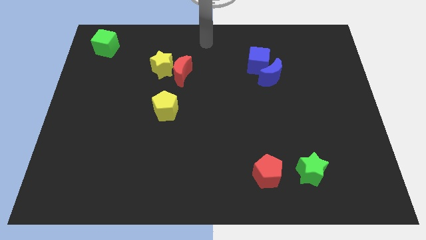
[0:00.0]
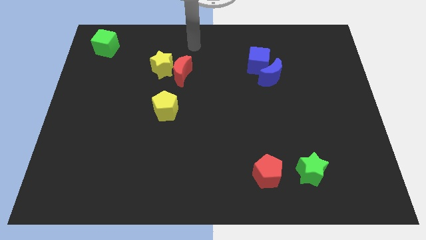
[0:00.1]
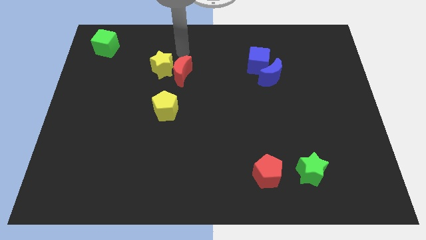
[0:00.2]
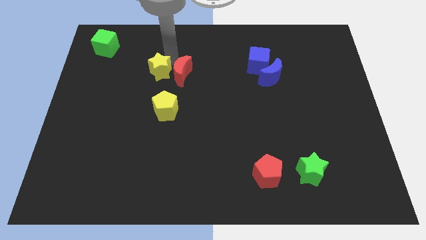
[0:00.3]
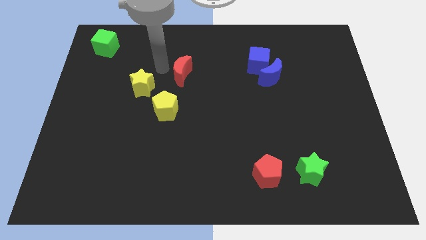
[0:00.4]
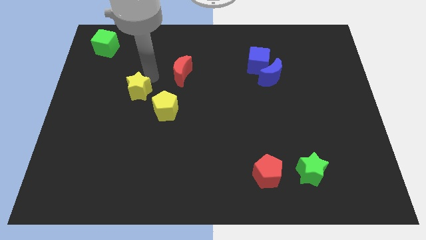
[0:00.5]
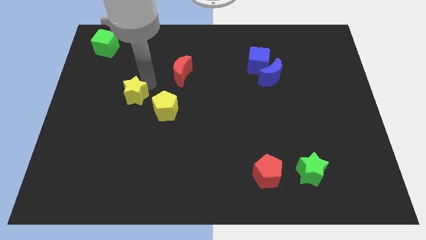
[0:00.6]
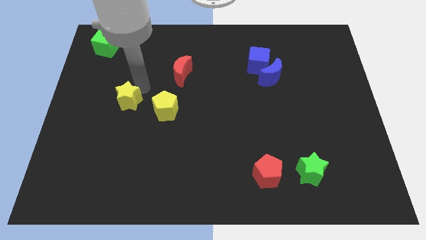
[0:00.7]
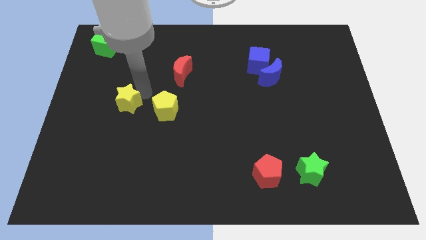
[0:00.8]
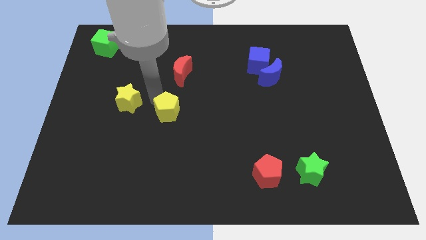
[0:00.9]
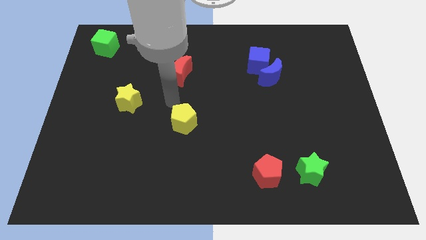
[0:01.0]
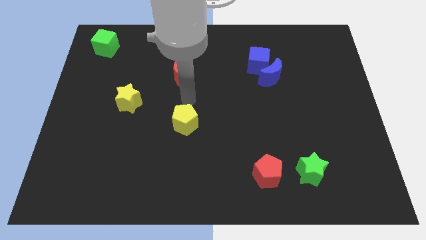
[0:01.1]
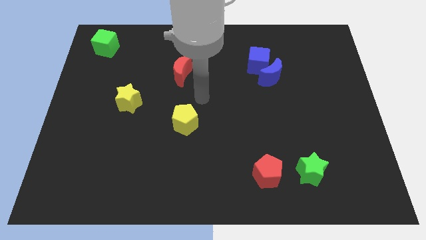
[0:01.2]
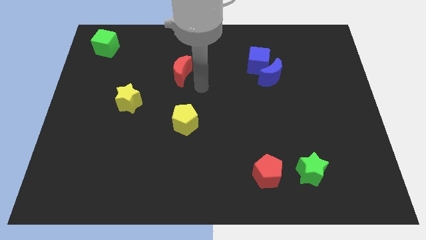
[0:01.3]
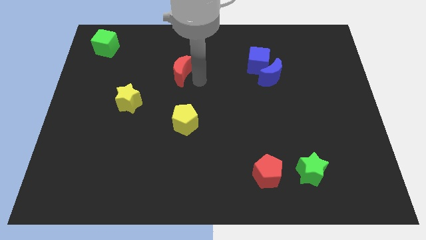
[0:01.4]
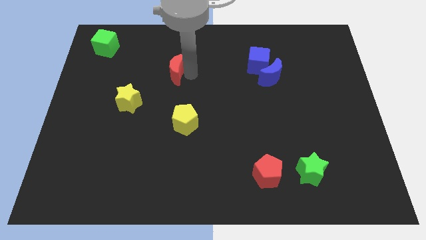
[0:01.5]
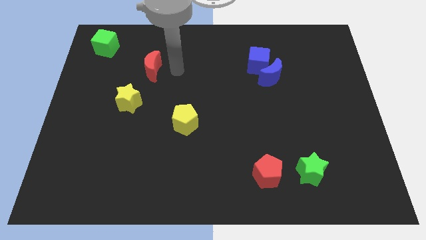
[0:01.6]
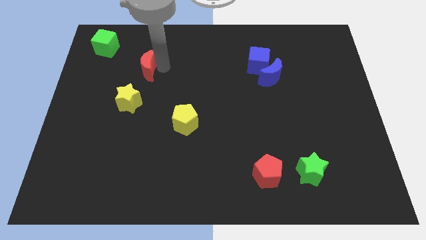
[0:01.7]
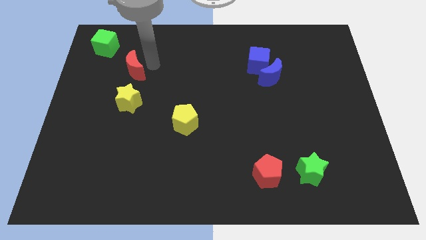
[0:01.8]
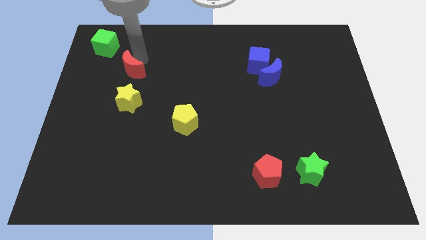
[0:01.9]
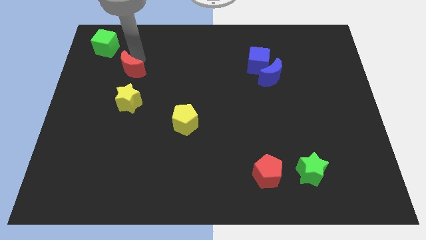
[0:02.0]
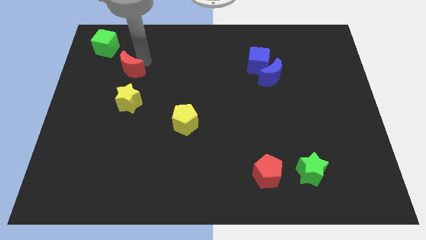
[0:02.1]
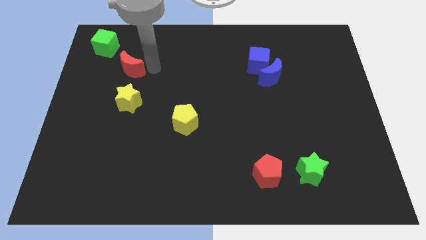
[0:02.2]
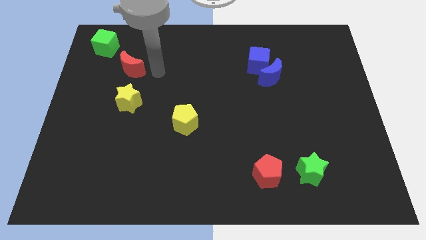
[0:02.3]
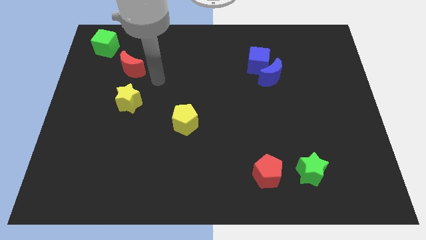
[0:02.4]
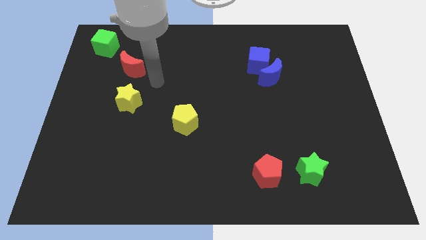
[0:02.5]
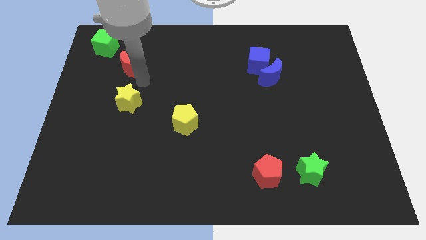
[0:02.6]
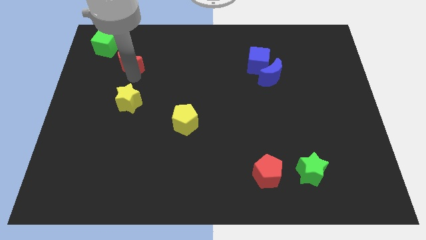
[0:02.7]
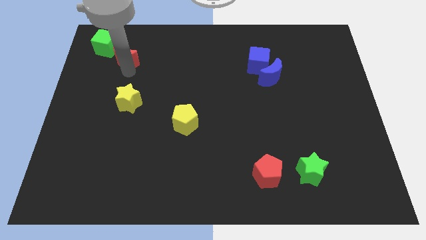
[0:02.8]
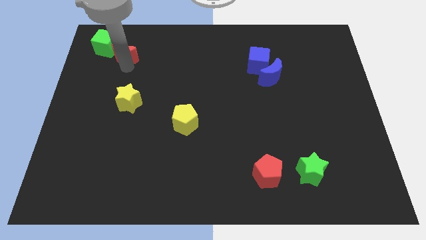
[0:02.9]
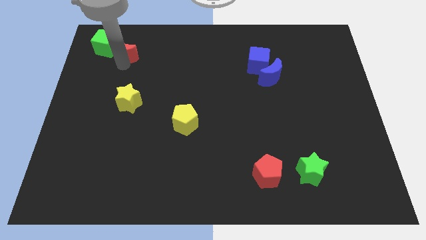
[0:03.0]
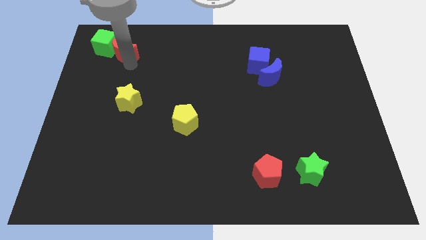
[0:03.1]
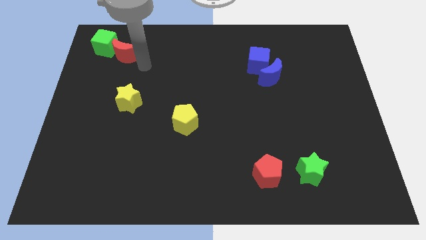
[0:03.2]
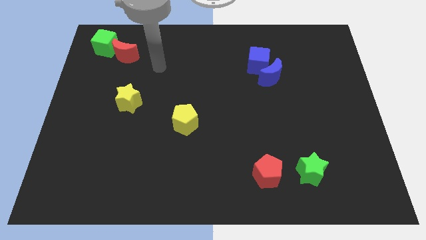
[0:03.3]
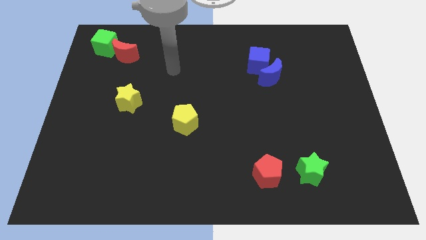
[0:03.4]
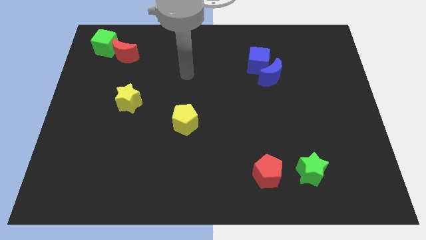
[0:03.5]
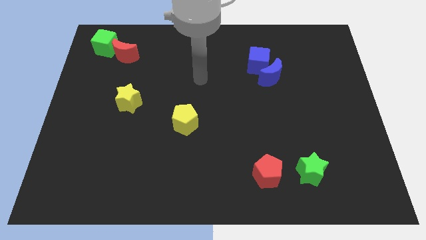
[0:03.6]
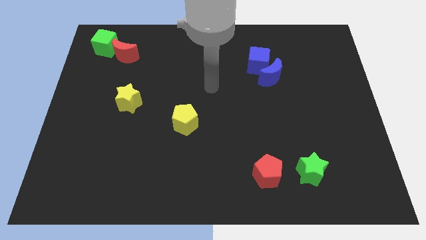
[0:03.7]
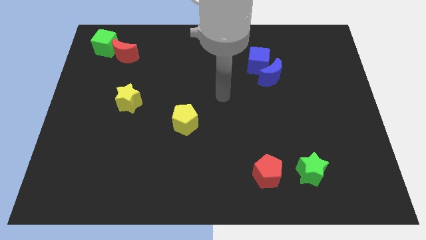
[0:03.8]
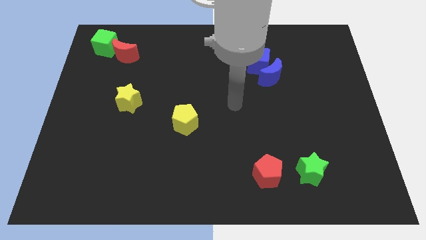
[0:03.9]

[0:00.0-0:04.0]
push the red crescent towards the green cube

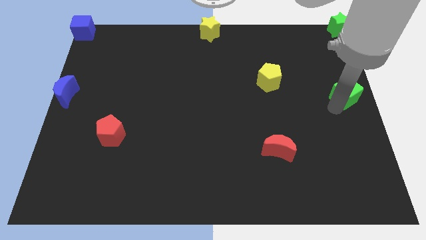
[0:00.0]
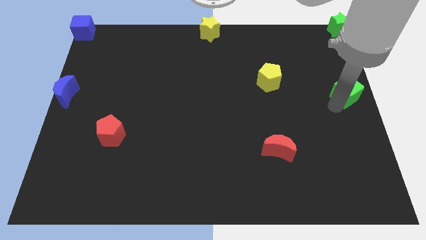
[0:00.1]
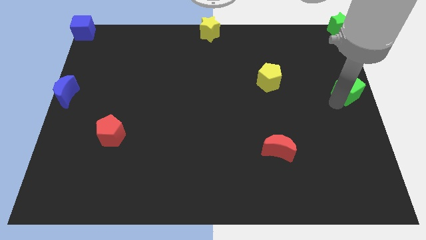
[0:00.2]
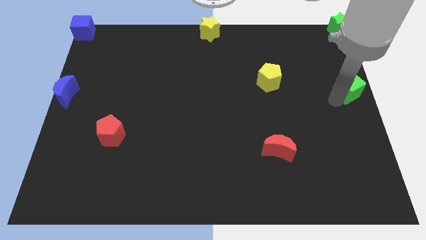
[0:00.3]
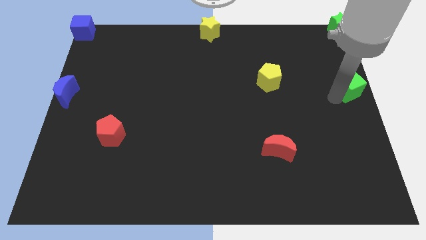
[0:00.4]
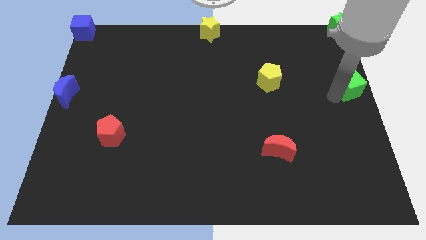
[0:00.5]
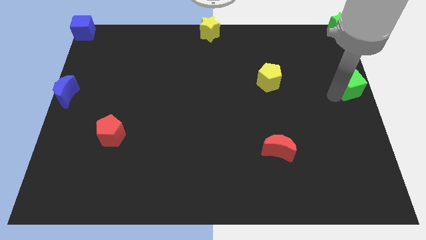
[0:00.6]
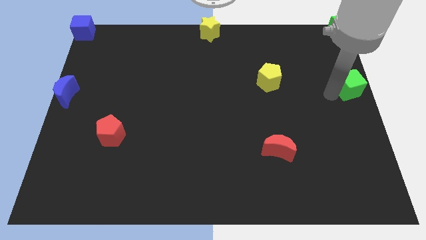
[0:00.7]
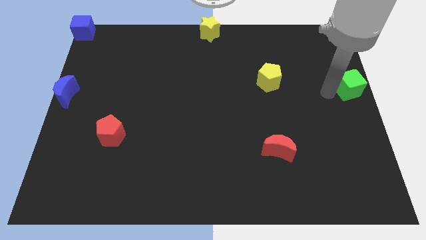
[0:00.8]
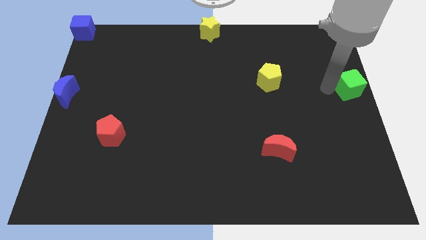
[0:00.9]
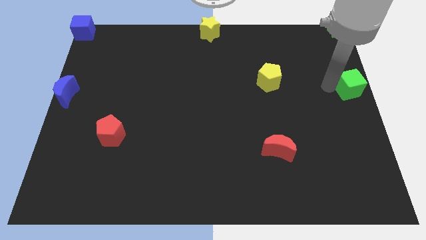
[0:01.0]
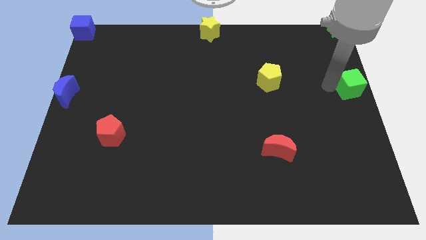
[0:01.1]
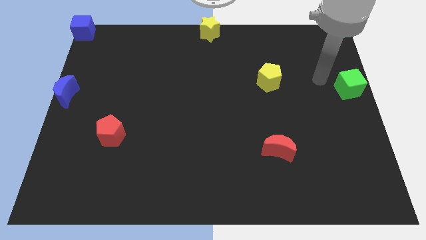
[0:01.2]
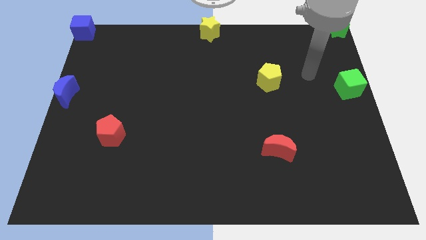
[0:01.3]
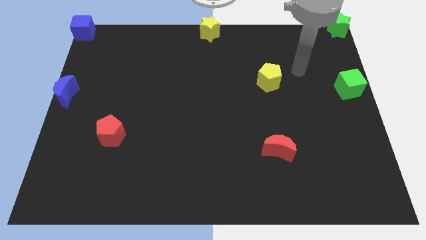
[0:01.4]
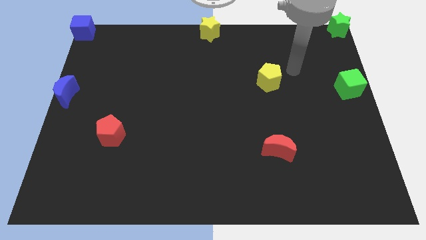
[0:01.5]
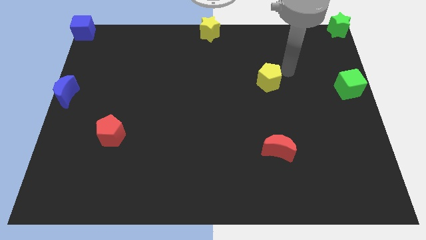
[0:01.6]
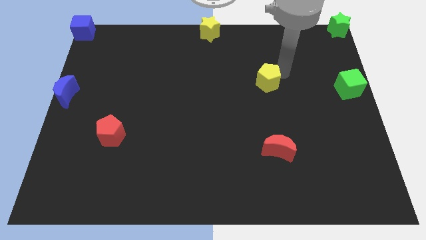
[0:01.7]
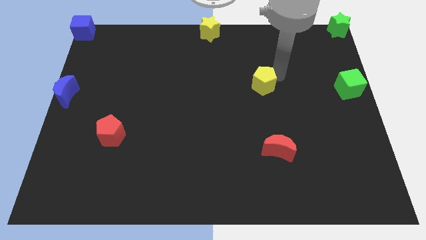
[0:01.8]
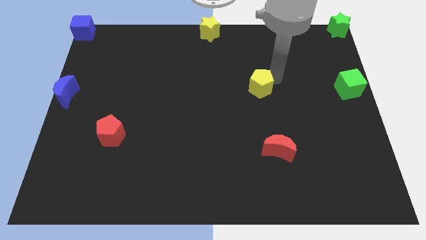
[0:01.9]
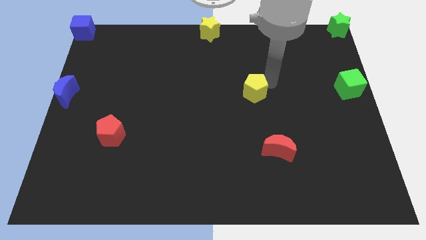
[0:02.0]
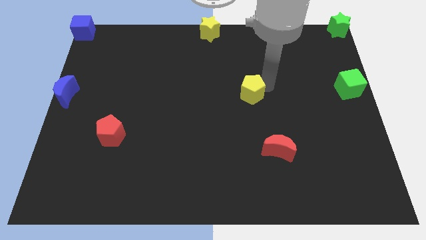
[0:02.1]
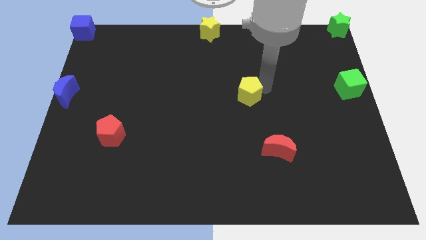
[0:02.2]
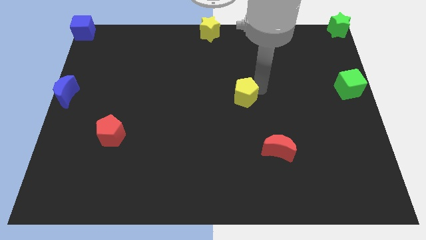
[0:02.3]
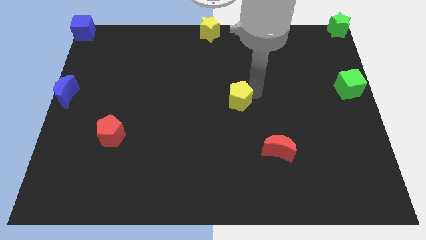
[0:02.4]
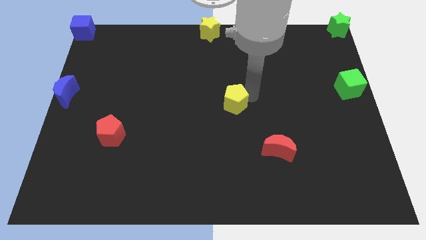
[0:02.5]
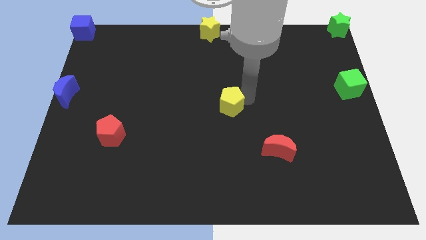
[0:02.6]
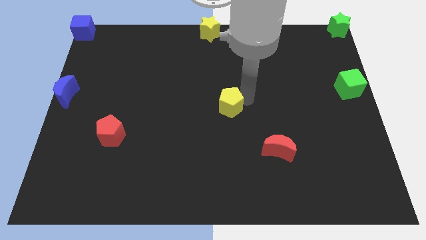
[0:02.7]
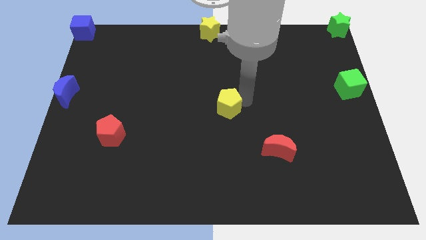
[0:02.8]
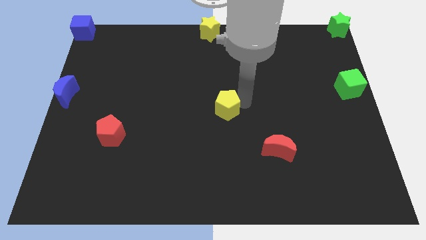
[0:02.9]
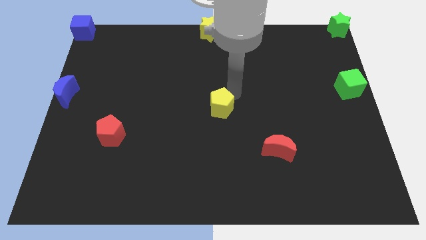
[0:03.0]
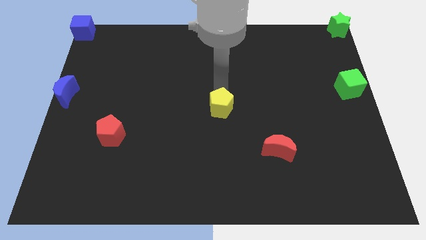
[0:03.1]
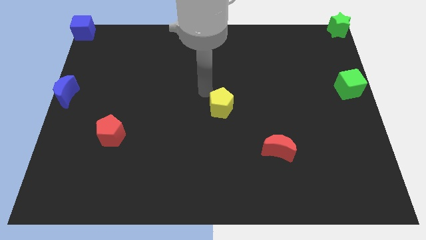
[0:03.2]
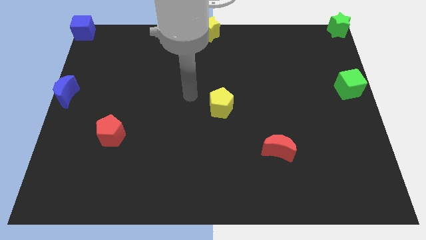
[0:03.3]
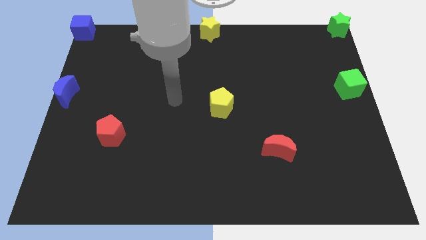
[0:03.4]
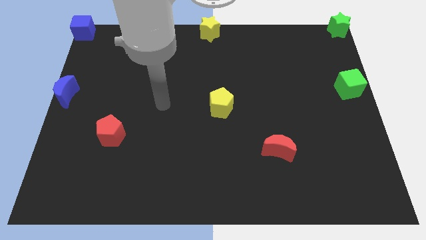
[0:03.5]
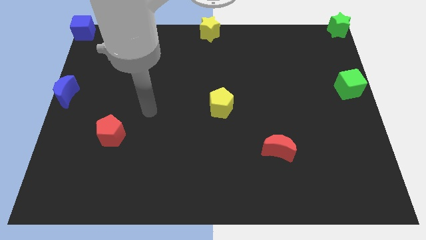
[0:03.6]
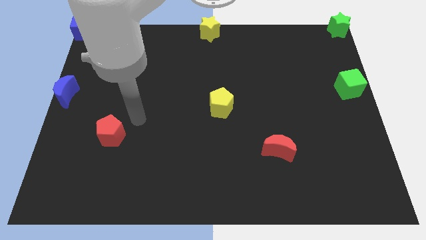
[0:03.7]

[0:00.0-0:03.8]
move yellow pentagon to the center of the board

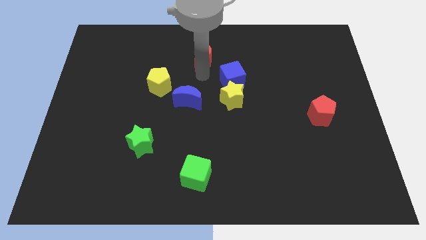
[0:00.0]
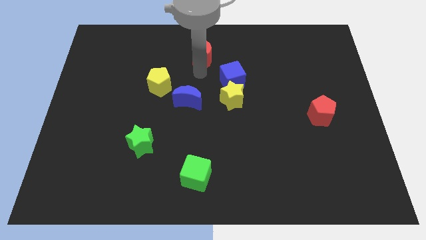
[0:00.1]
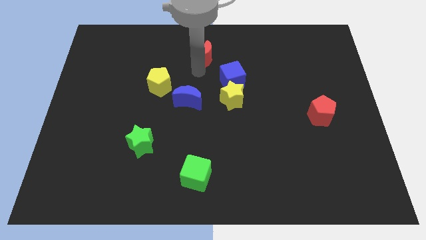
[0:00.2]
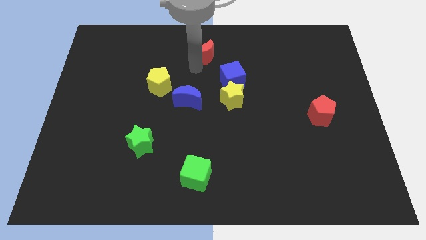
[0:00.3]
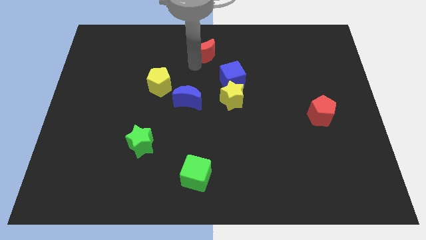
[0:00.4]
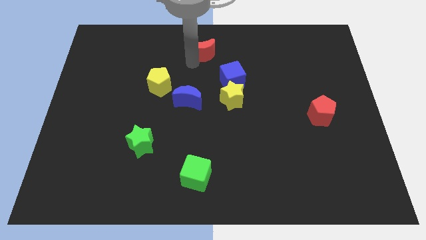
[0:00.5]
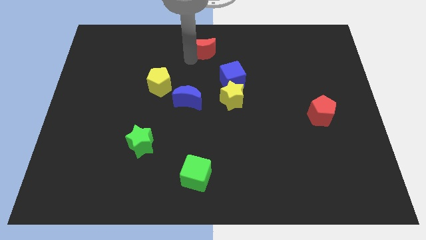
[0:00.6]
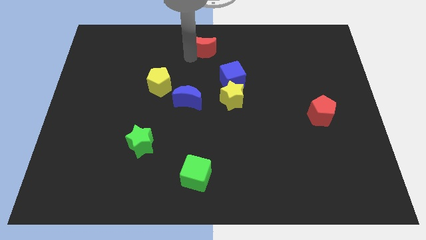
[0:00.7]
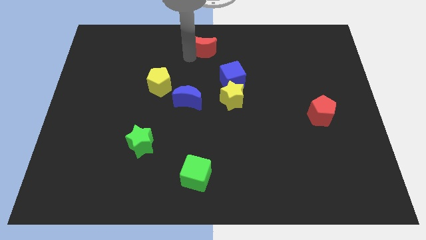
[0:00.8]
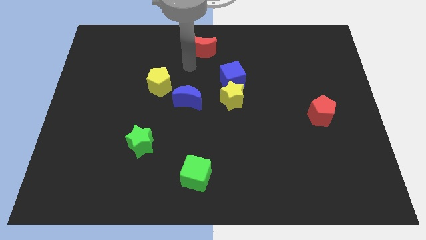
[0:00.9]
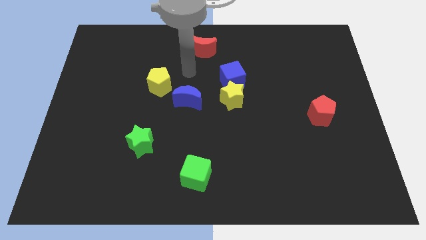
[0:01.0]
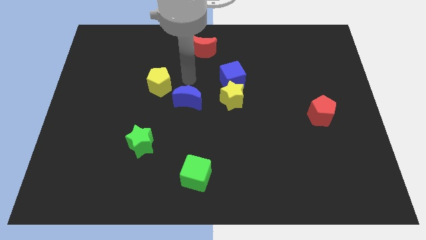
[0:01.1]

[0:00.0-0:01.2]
move the red moon to the center top

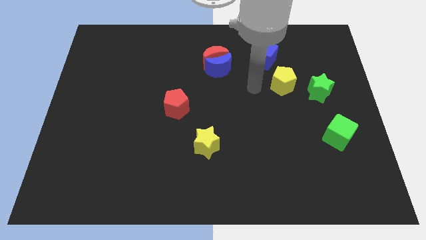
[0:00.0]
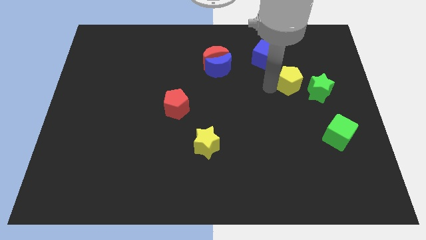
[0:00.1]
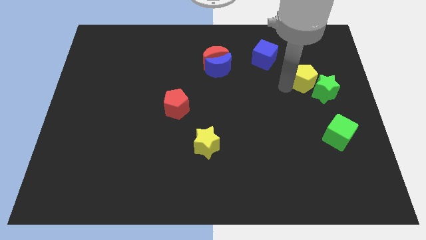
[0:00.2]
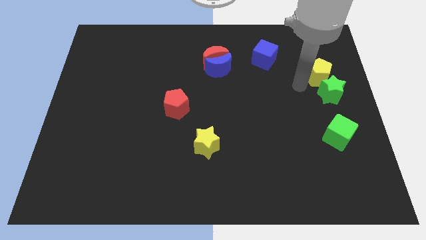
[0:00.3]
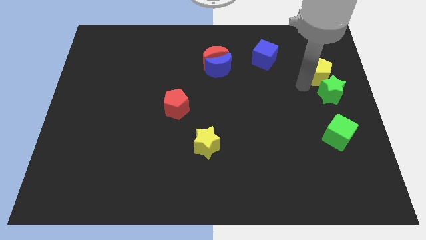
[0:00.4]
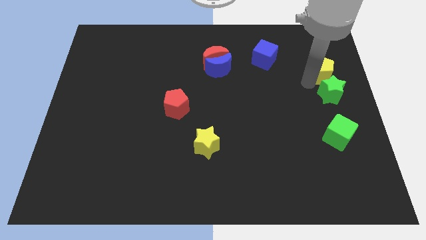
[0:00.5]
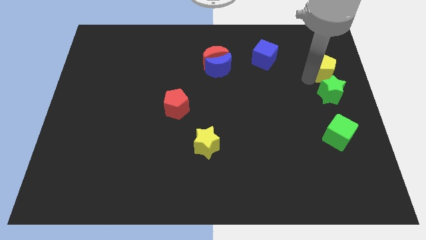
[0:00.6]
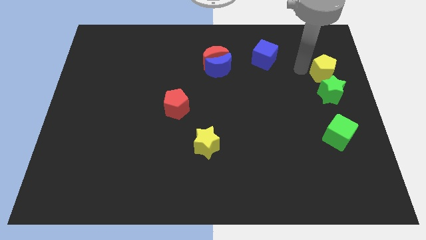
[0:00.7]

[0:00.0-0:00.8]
move the yellow pentagon to the right of the green star
